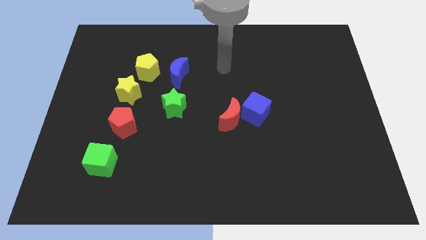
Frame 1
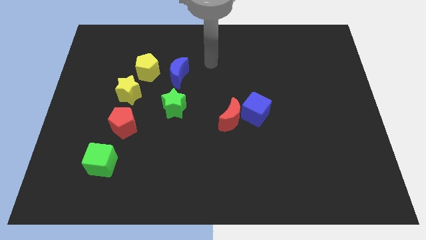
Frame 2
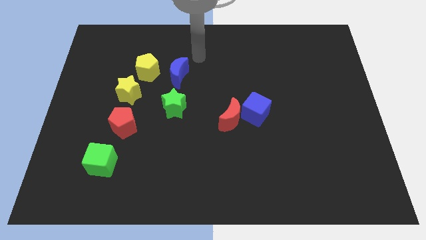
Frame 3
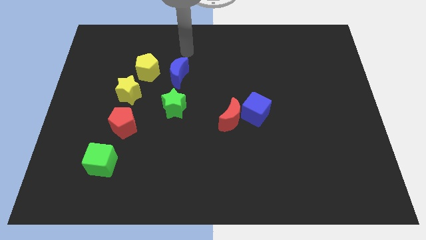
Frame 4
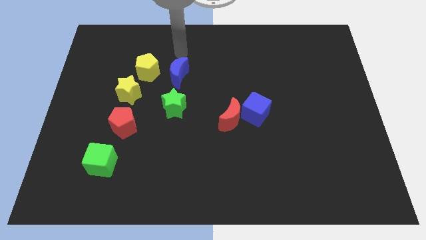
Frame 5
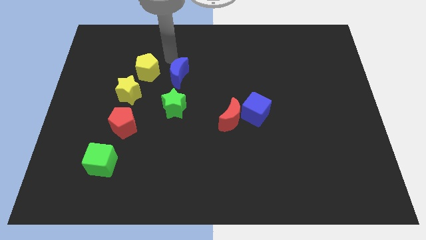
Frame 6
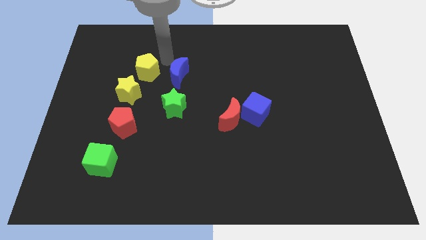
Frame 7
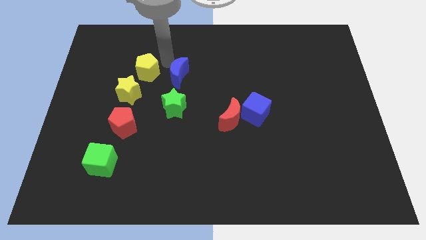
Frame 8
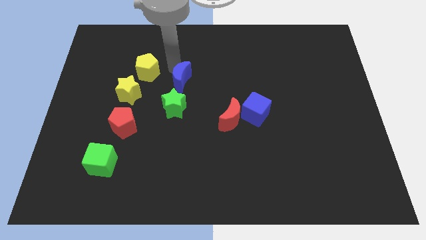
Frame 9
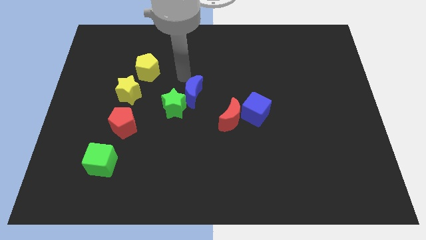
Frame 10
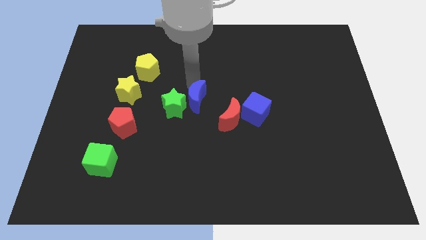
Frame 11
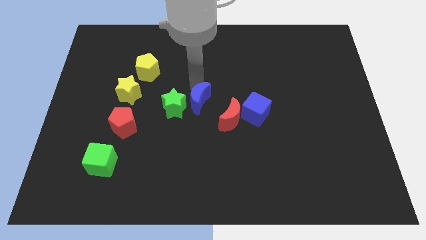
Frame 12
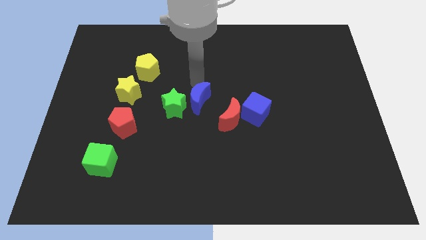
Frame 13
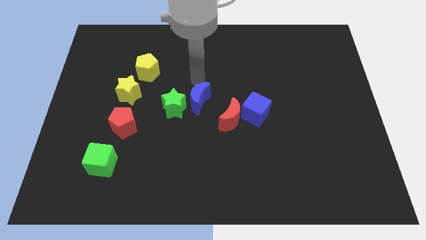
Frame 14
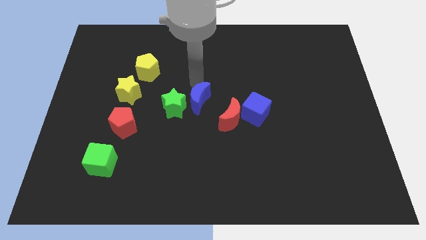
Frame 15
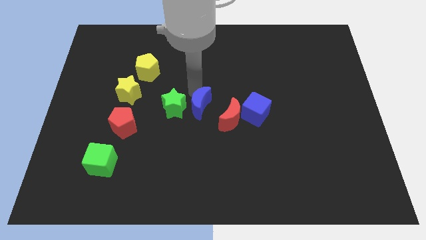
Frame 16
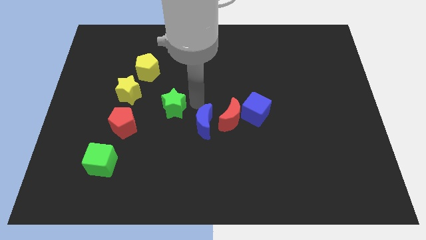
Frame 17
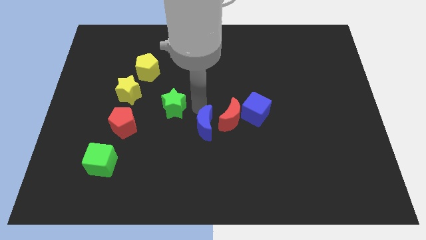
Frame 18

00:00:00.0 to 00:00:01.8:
push the blue crescent to the center of the board

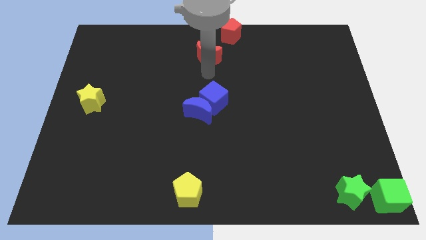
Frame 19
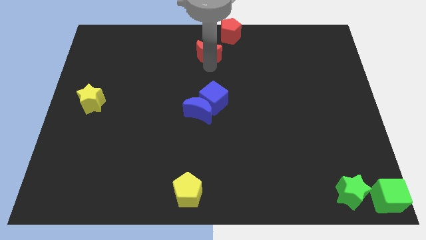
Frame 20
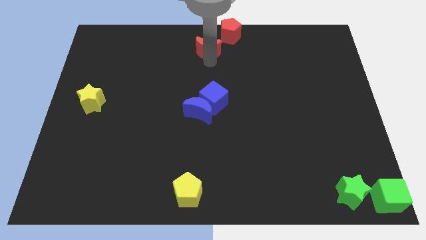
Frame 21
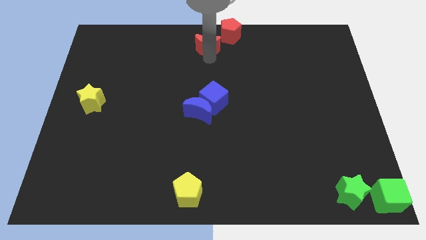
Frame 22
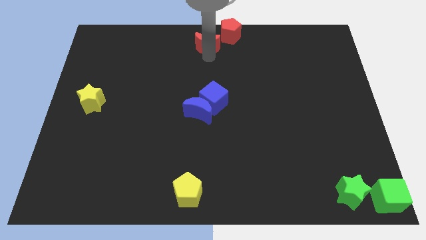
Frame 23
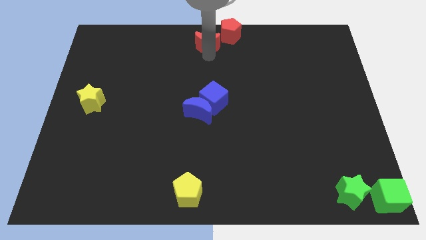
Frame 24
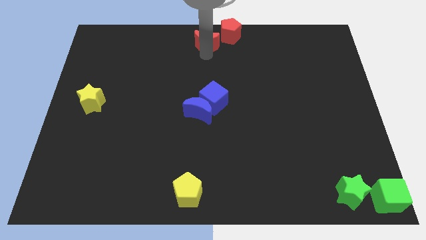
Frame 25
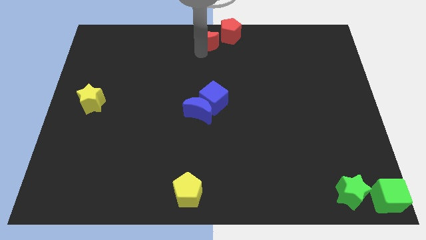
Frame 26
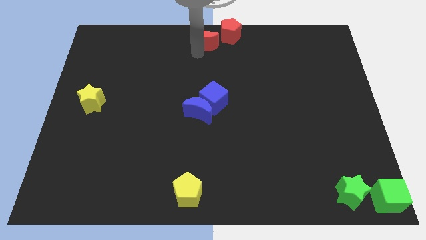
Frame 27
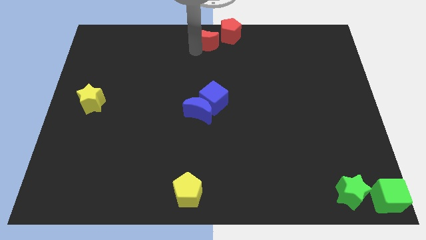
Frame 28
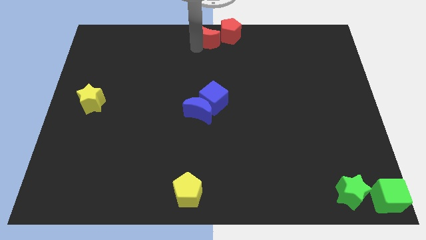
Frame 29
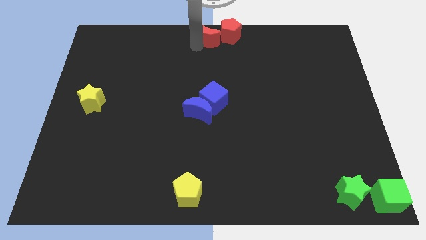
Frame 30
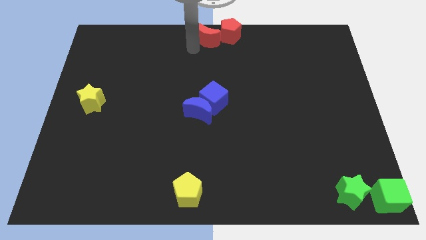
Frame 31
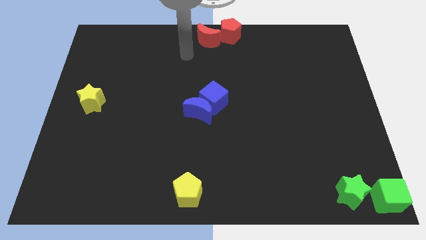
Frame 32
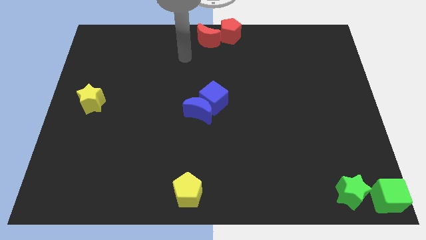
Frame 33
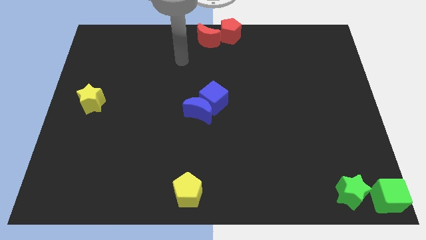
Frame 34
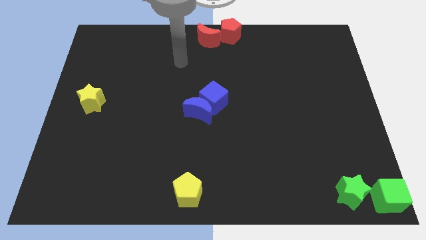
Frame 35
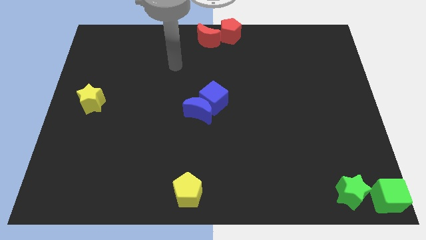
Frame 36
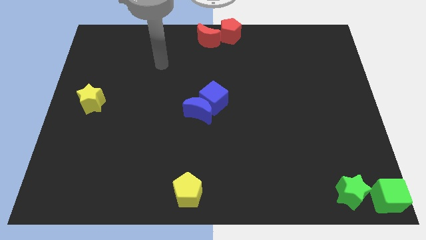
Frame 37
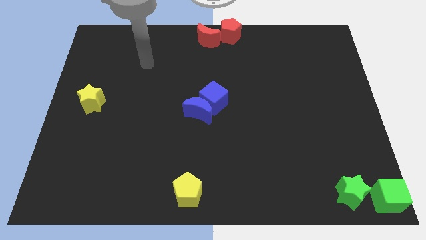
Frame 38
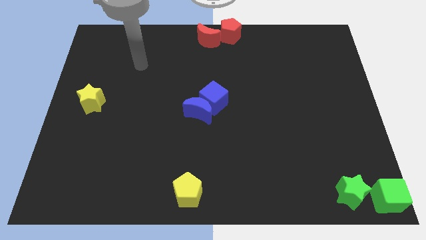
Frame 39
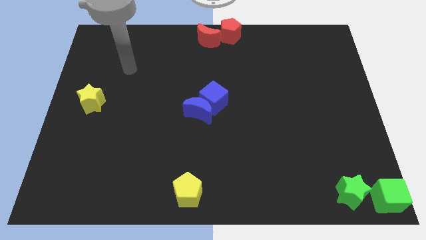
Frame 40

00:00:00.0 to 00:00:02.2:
move the red crescent to the left of the red pentagon

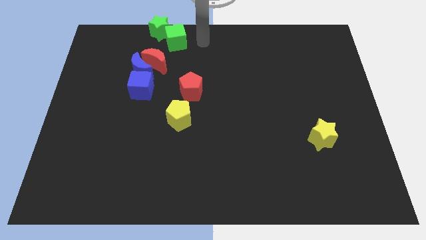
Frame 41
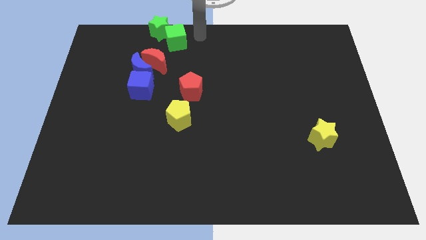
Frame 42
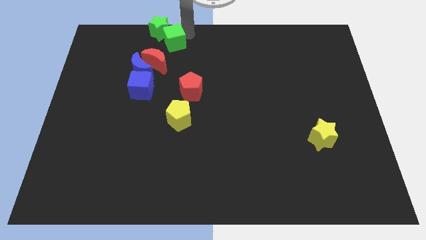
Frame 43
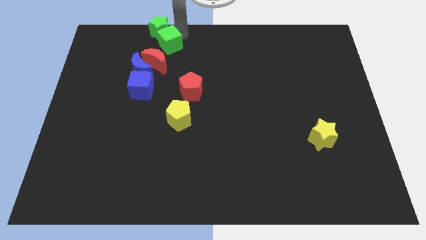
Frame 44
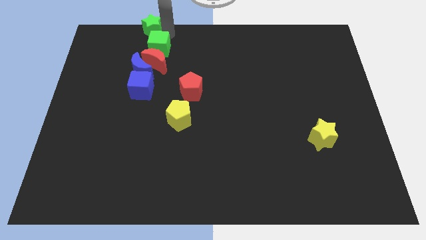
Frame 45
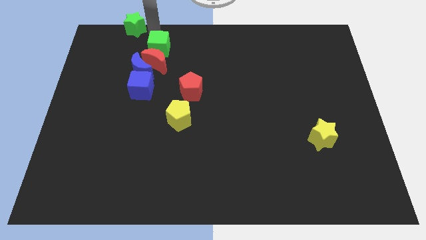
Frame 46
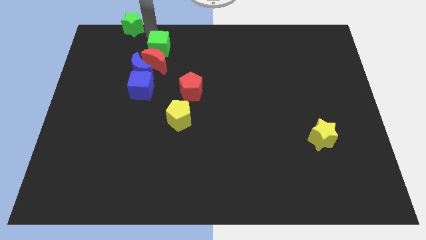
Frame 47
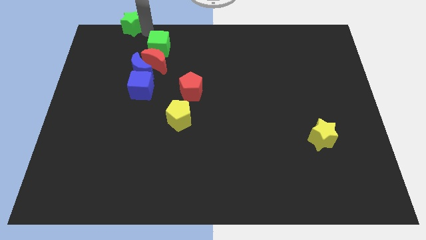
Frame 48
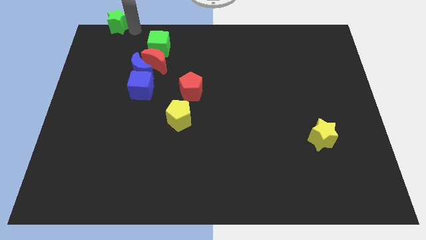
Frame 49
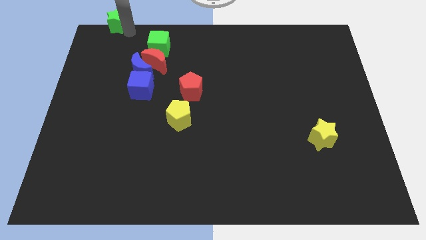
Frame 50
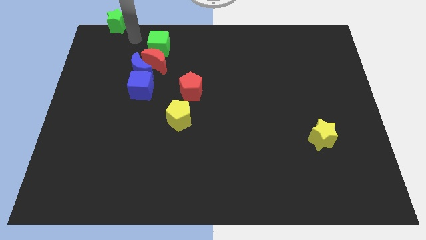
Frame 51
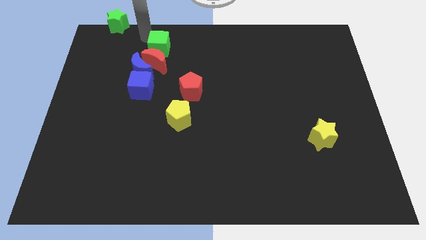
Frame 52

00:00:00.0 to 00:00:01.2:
slide green star to top left

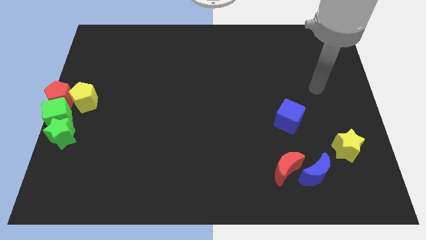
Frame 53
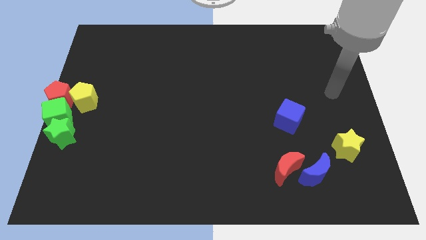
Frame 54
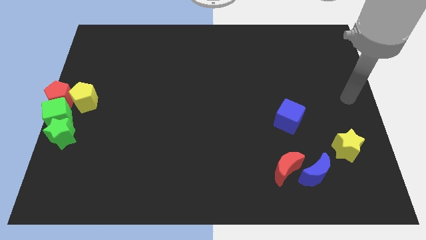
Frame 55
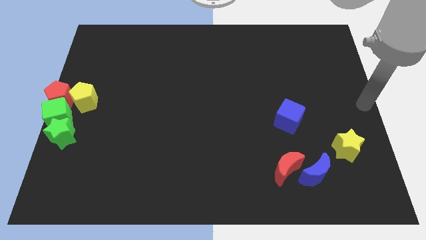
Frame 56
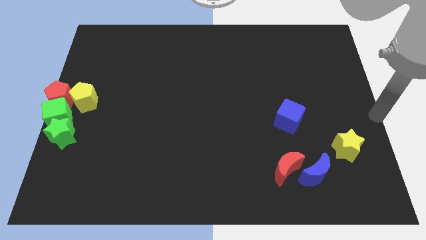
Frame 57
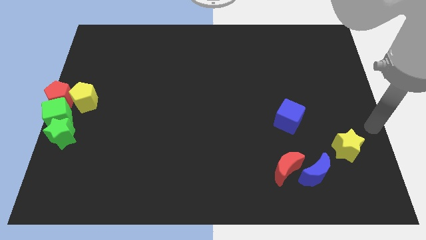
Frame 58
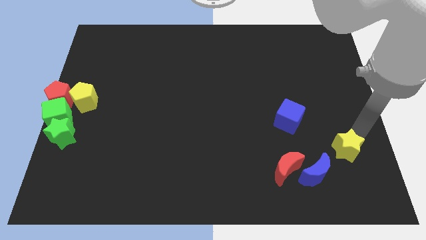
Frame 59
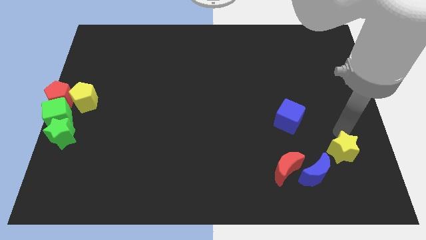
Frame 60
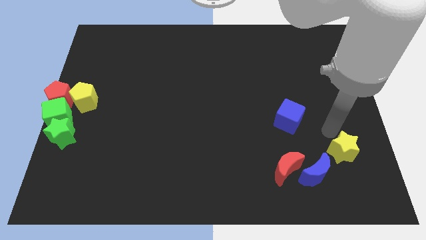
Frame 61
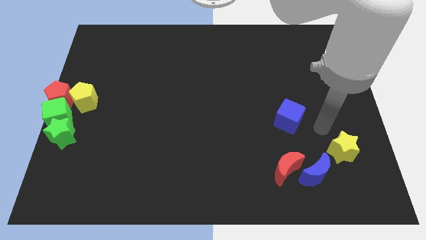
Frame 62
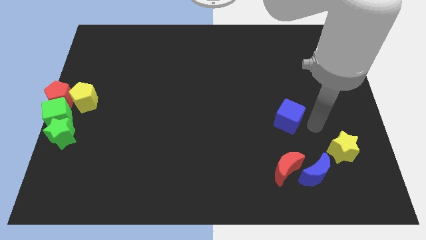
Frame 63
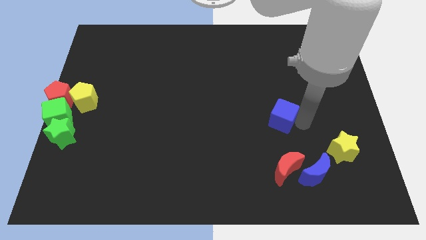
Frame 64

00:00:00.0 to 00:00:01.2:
slightly touch the yellow star

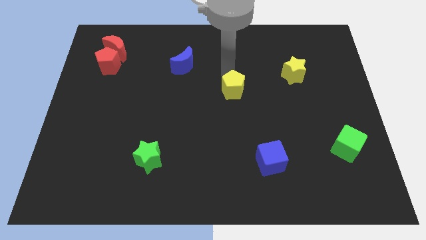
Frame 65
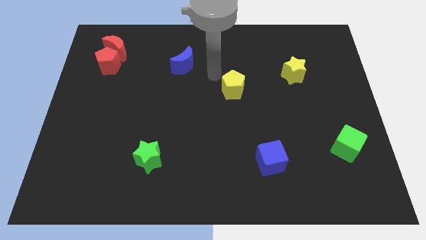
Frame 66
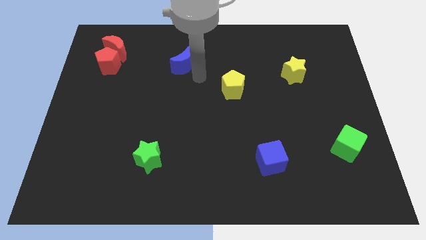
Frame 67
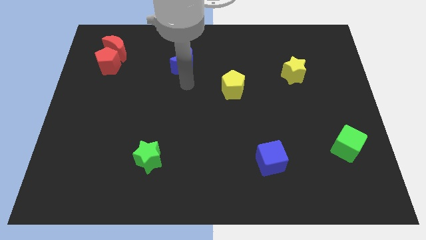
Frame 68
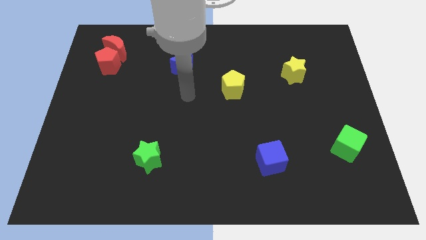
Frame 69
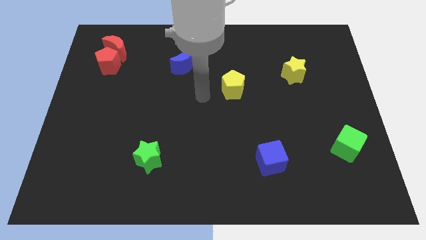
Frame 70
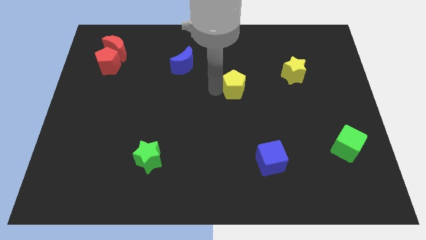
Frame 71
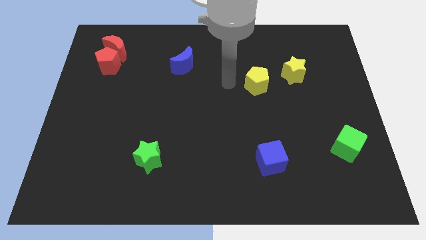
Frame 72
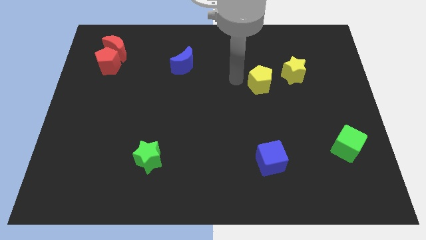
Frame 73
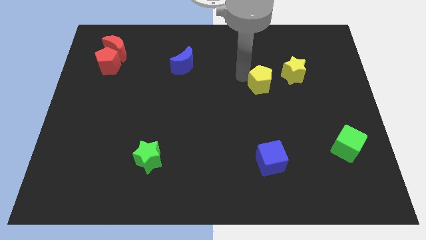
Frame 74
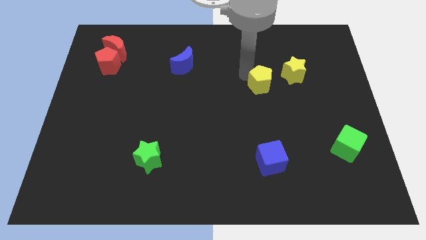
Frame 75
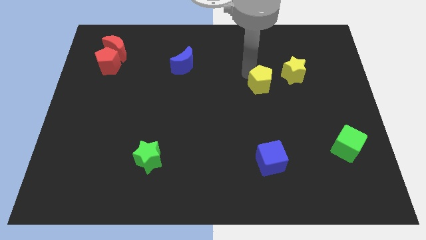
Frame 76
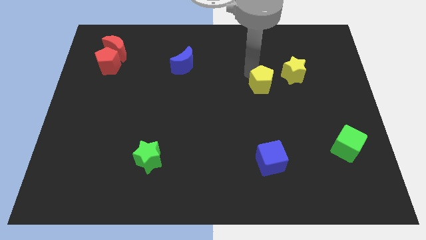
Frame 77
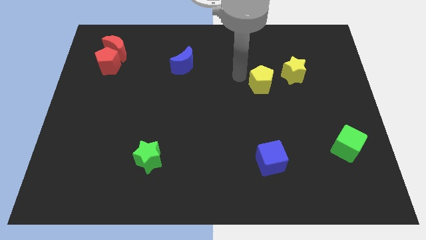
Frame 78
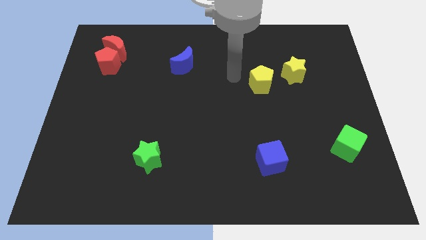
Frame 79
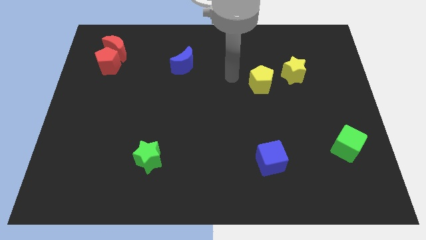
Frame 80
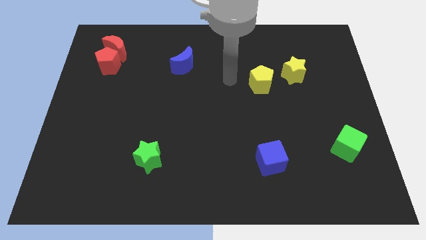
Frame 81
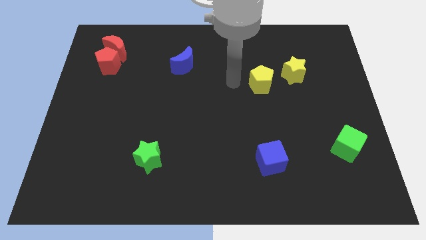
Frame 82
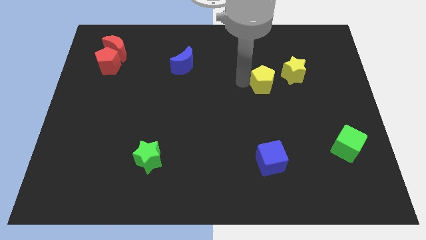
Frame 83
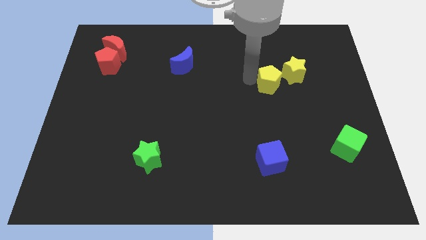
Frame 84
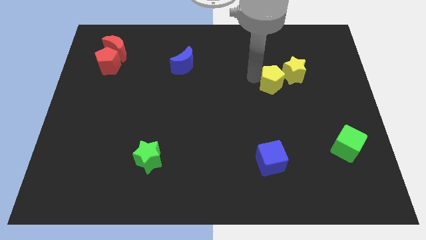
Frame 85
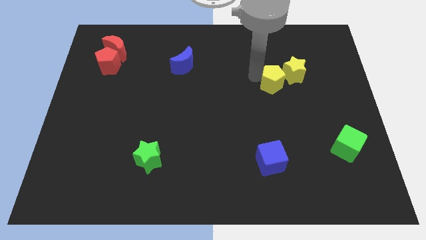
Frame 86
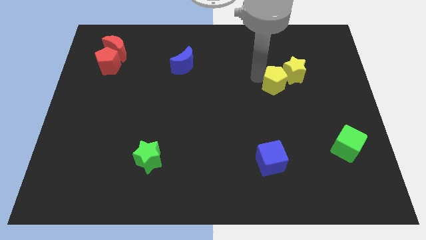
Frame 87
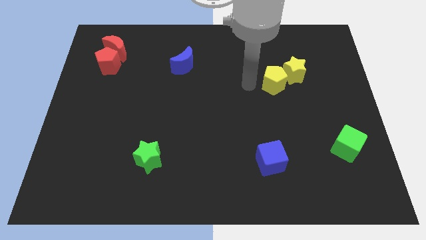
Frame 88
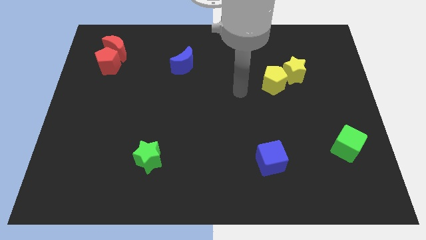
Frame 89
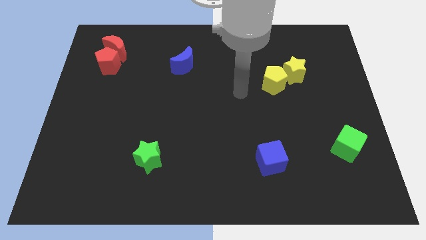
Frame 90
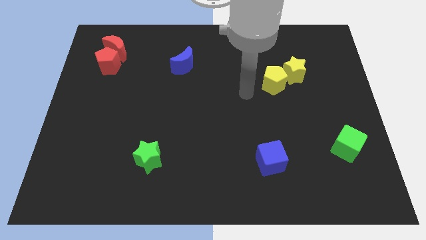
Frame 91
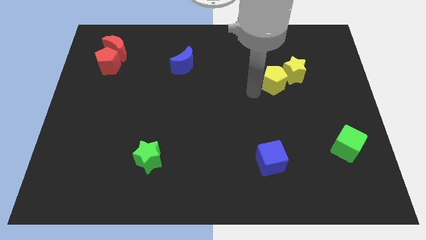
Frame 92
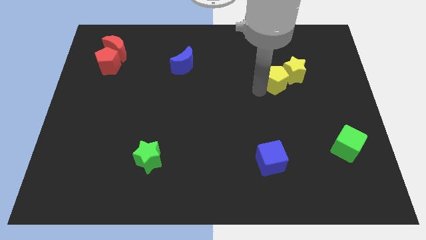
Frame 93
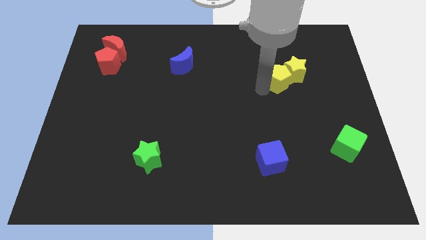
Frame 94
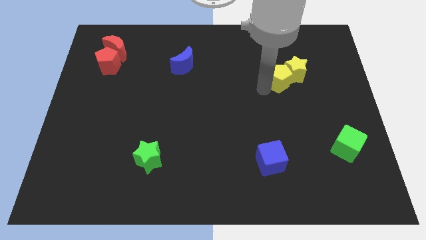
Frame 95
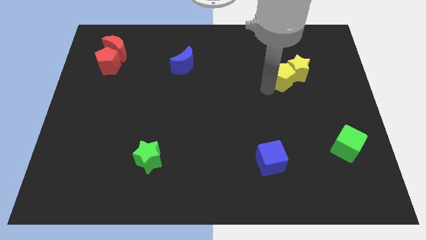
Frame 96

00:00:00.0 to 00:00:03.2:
push yellow pentagon into yellow star
